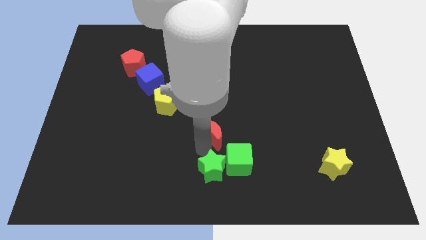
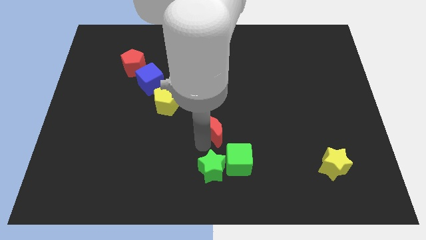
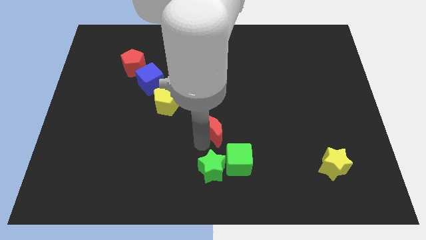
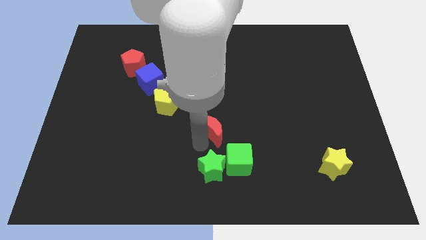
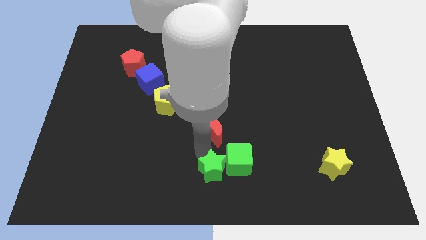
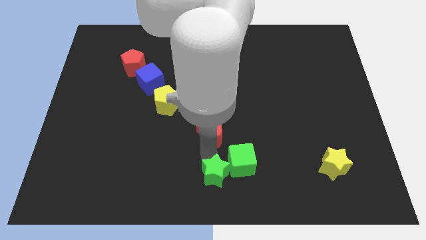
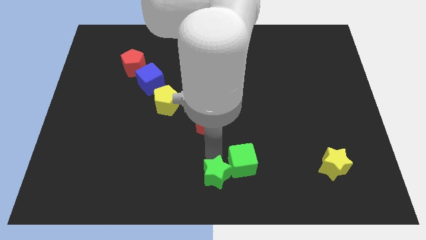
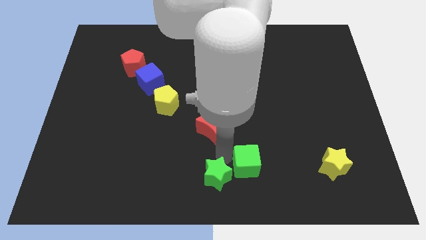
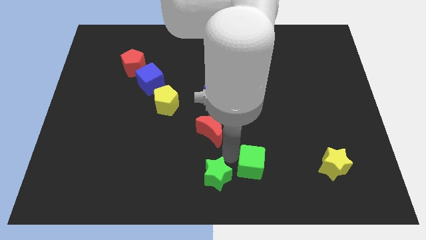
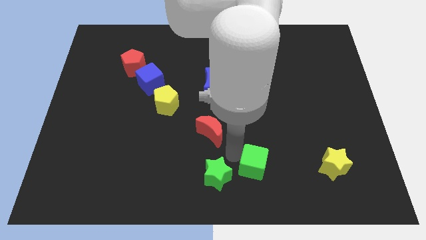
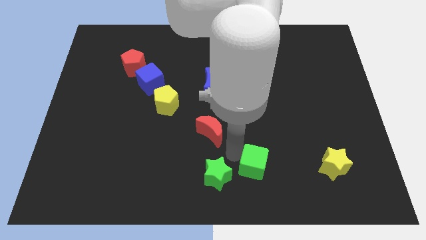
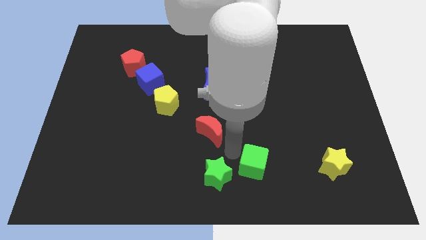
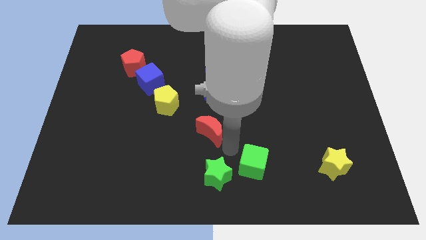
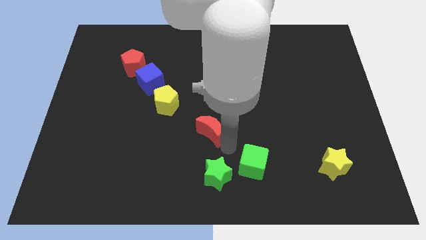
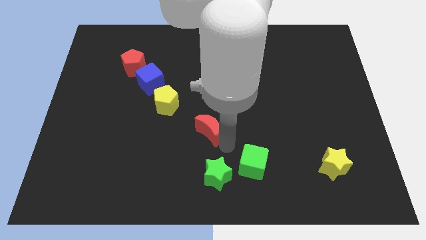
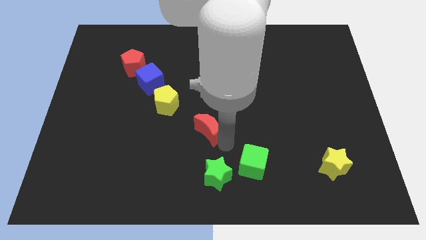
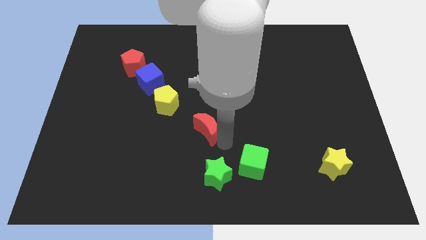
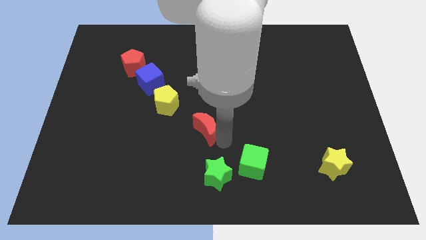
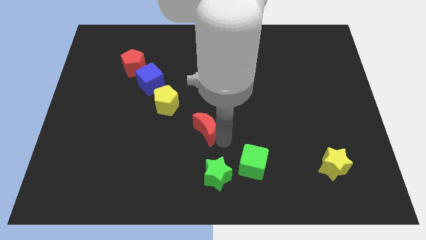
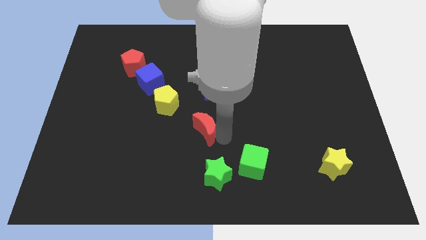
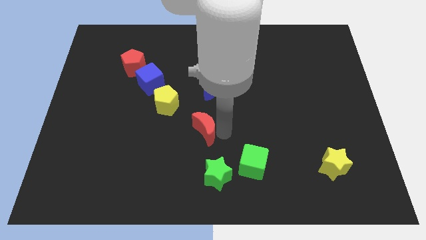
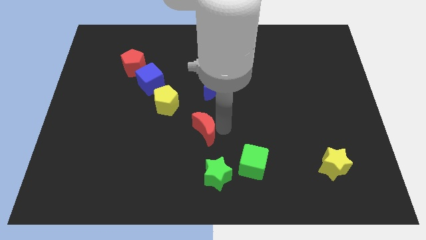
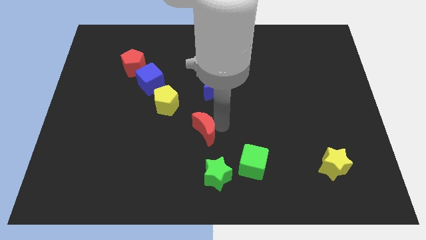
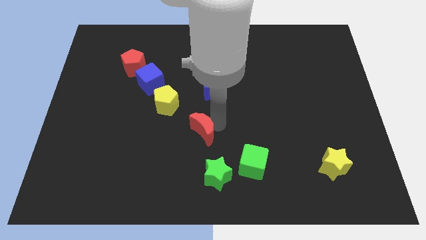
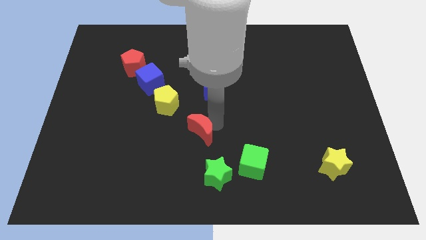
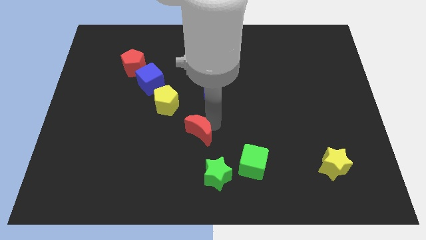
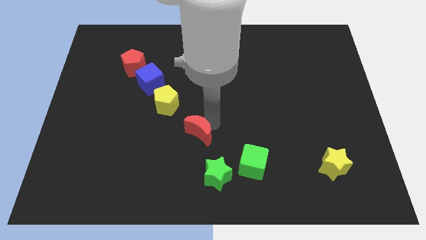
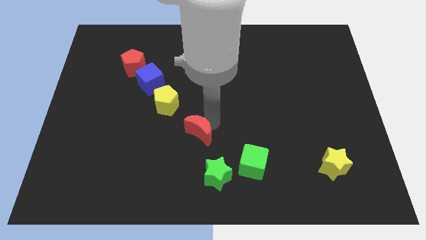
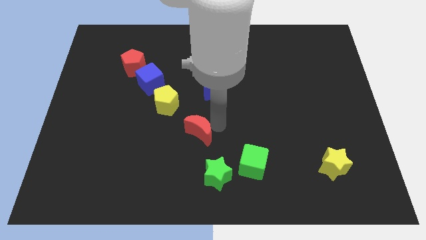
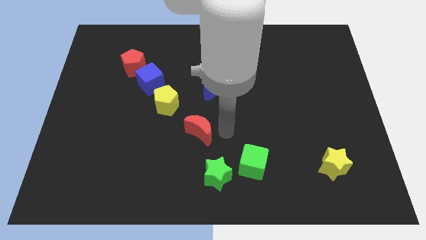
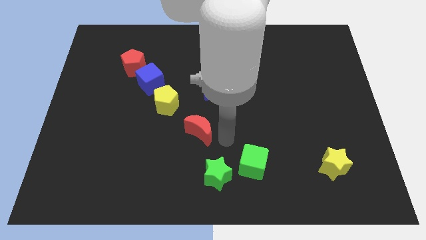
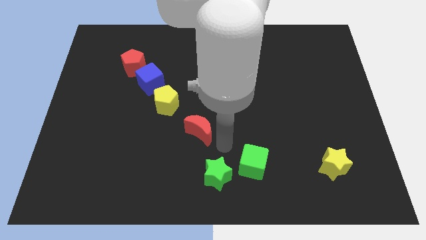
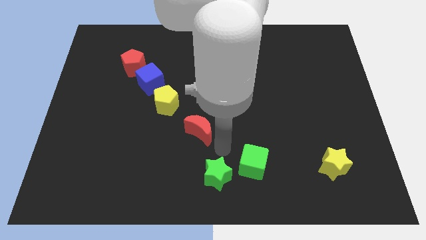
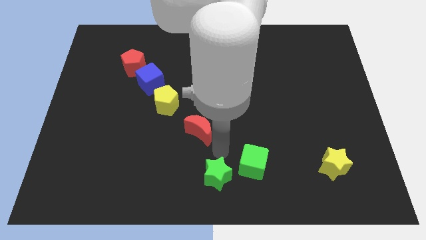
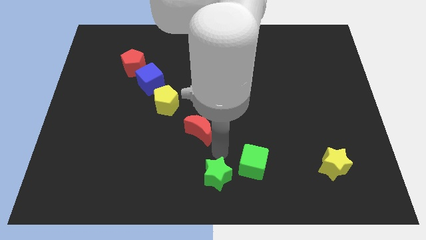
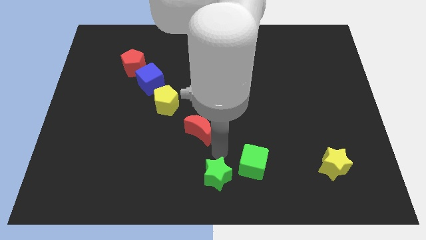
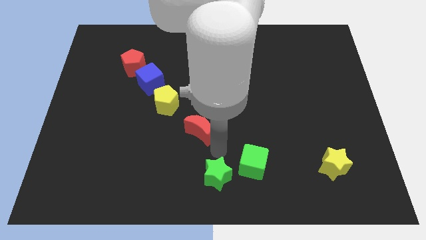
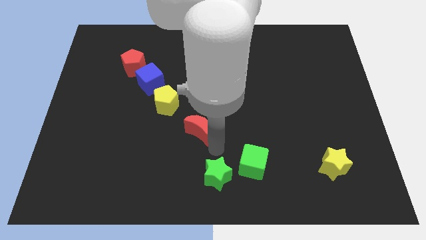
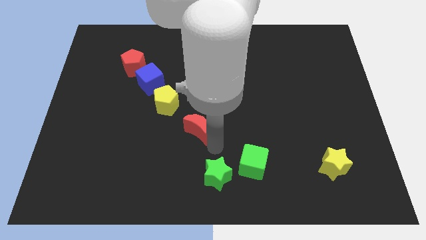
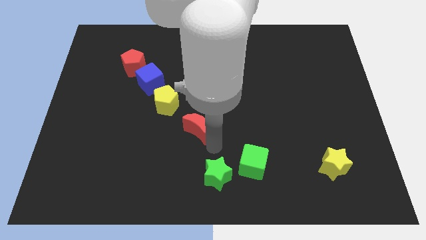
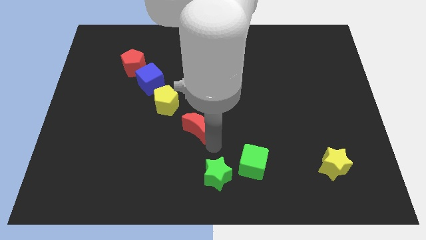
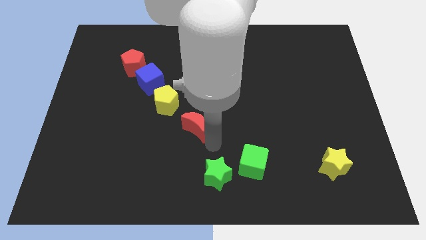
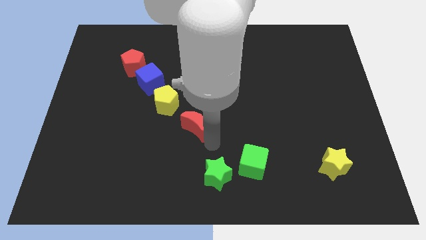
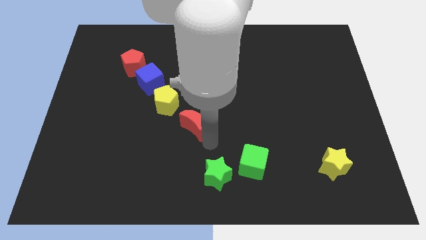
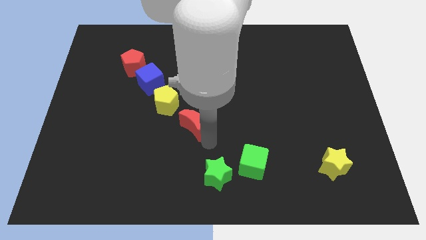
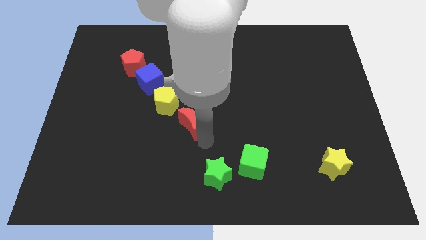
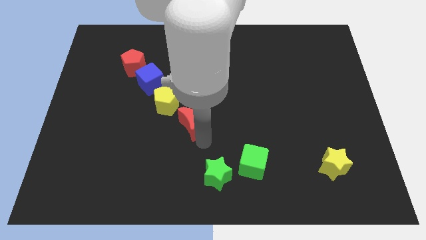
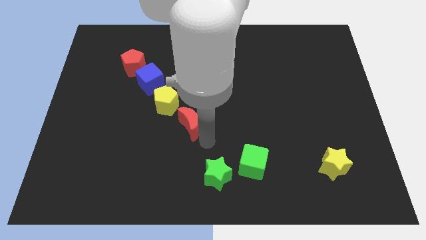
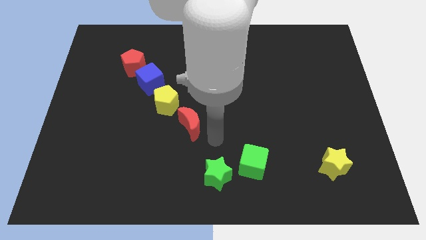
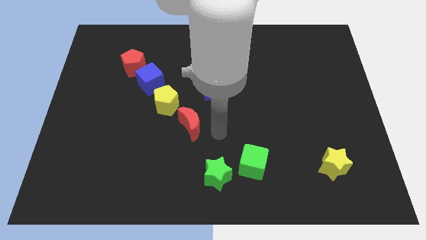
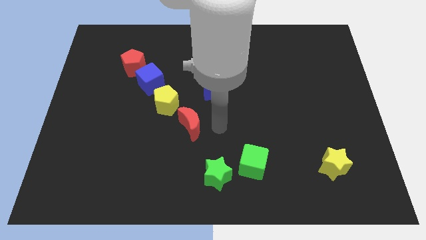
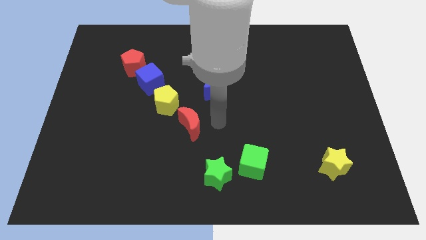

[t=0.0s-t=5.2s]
push red crescent away from green star

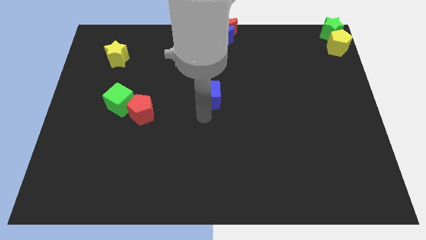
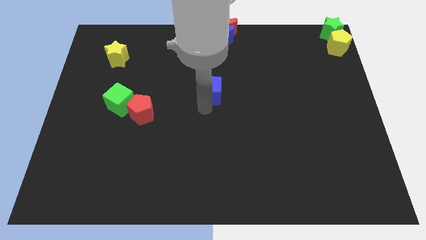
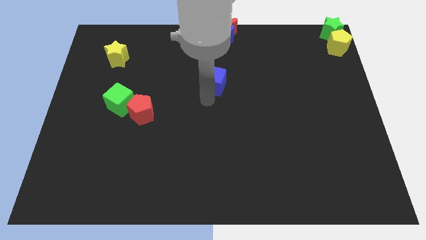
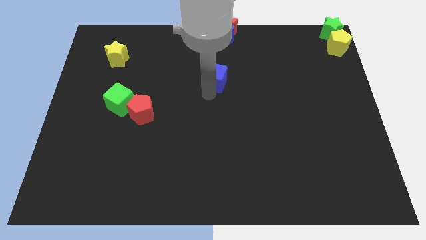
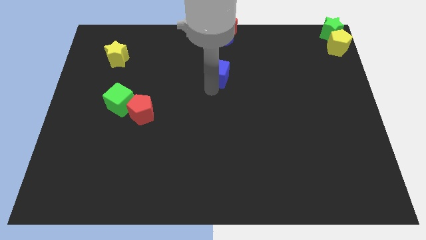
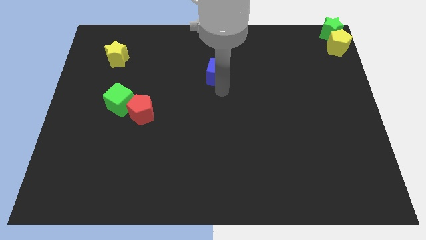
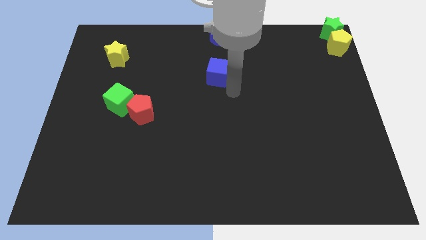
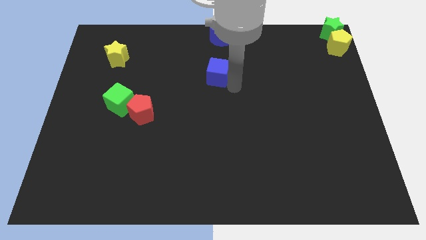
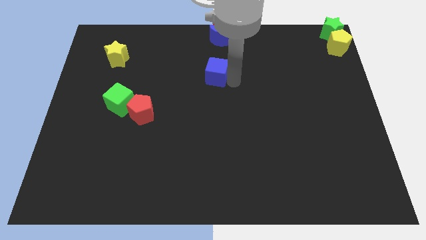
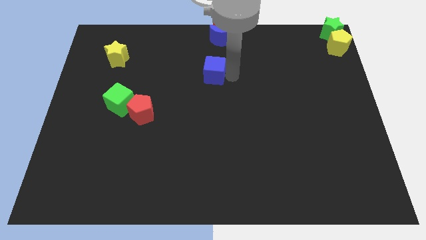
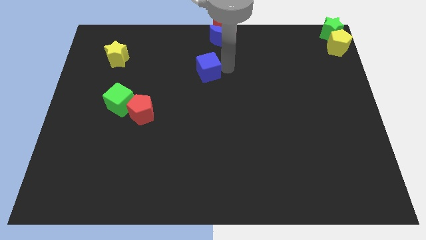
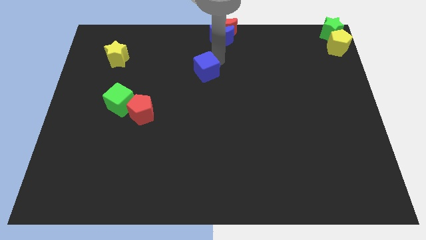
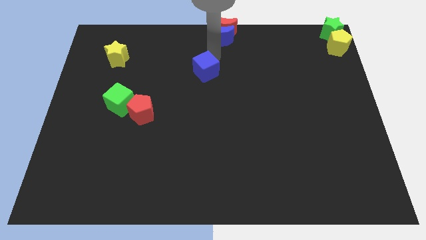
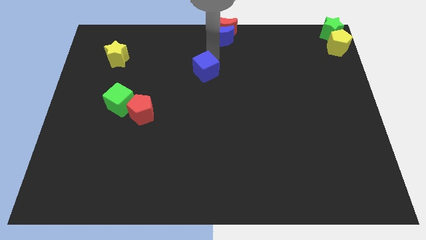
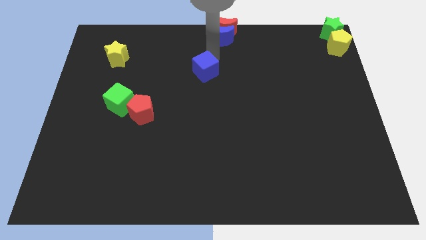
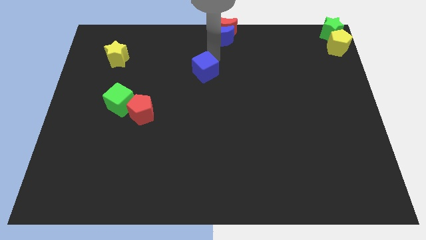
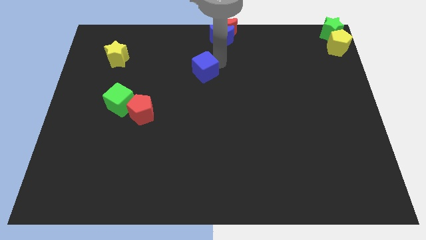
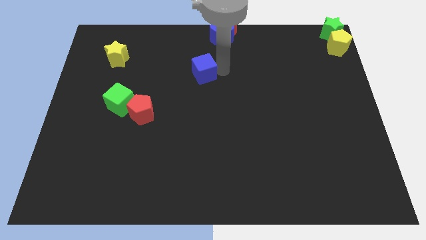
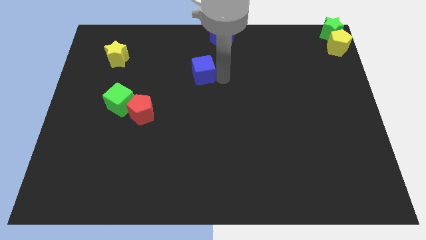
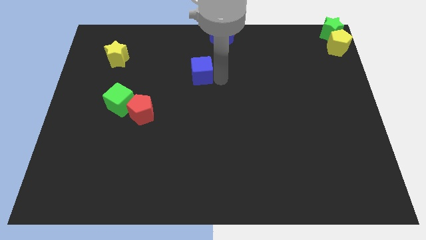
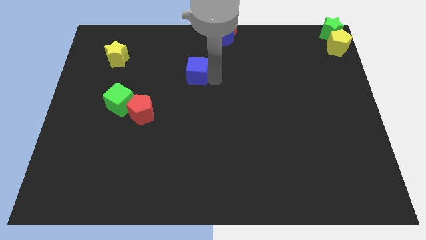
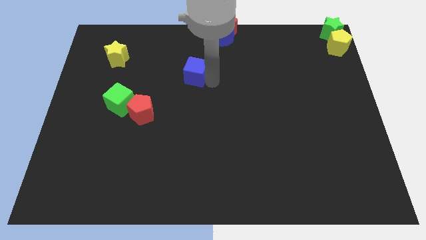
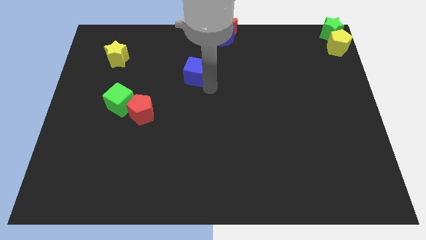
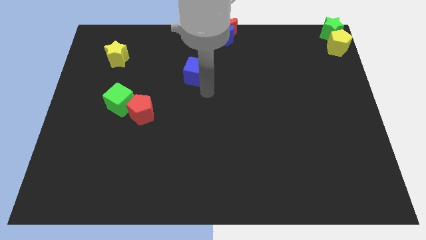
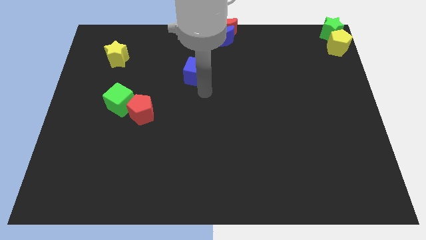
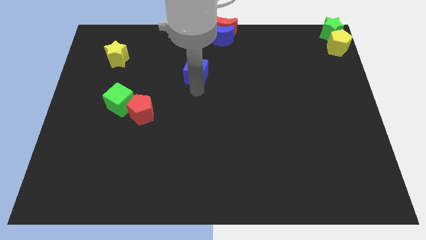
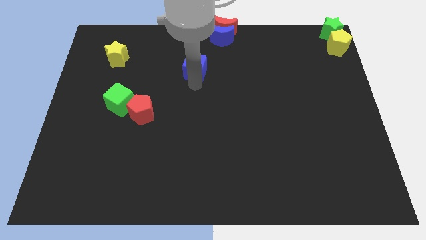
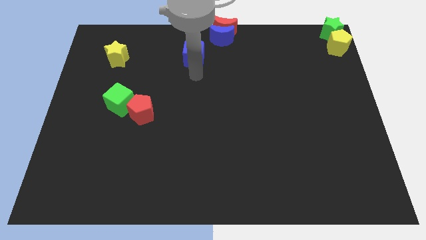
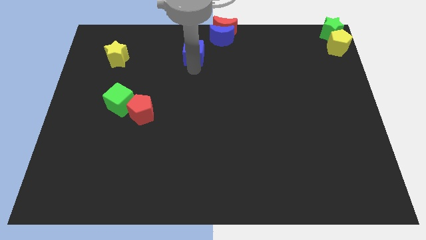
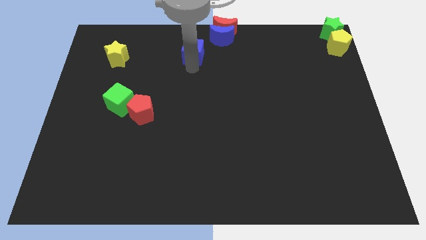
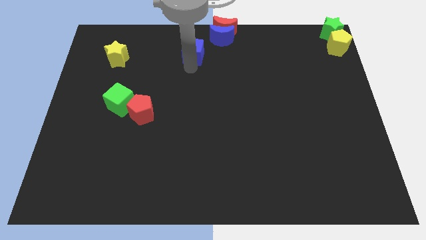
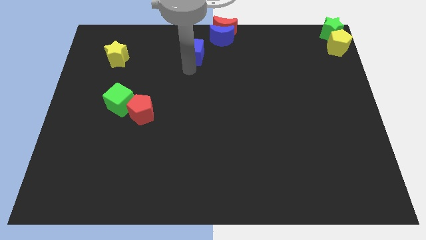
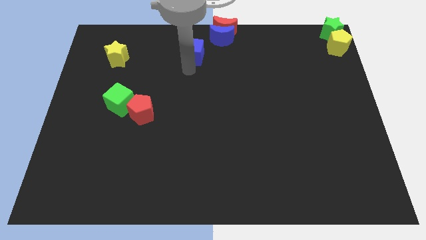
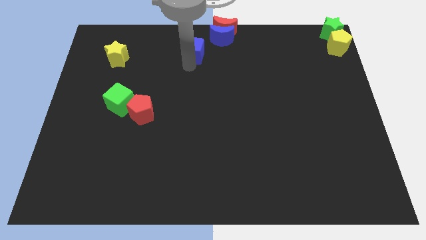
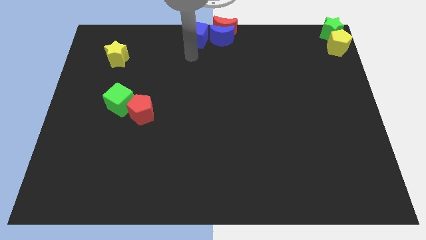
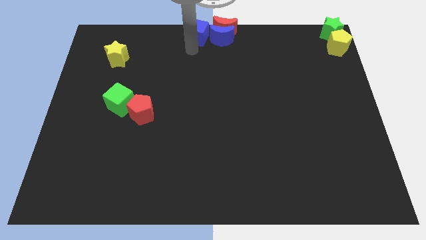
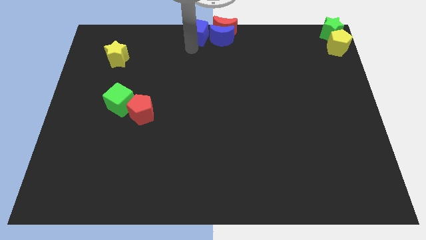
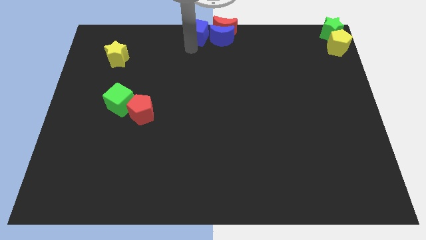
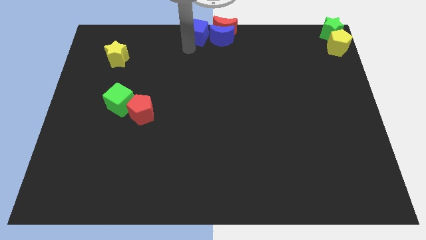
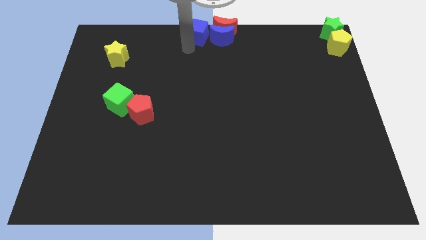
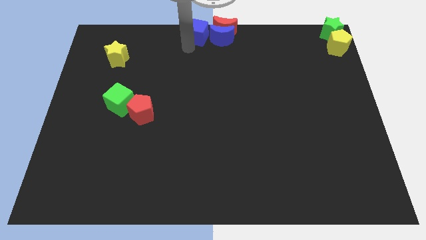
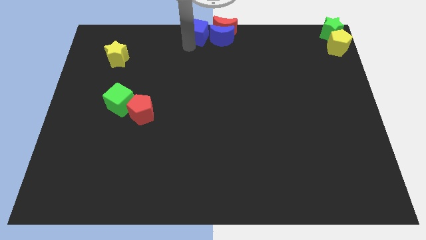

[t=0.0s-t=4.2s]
place the blue cube left to the blue crescent
